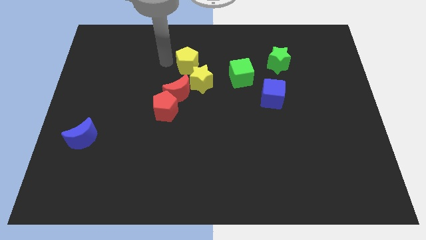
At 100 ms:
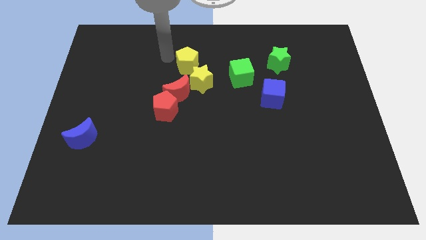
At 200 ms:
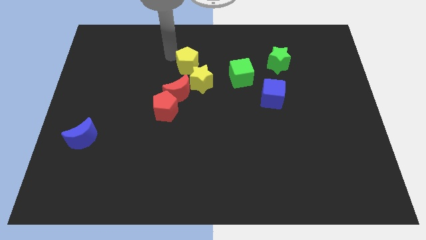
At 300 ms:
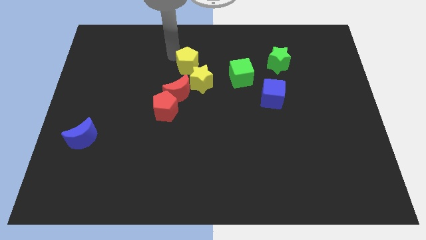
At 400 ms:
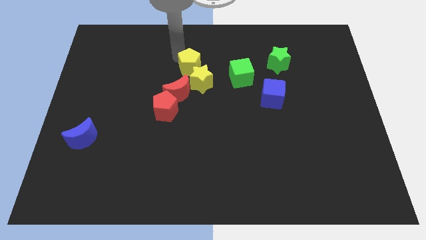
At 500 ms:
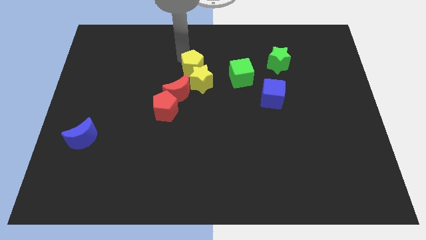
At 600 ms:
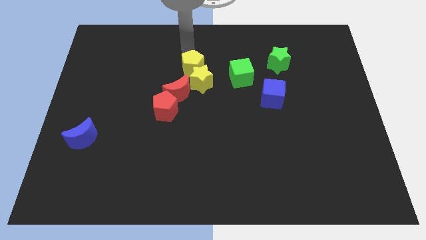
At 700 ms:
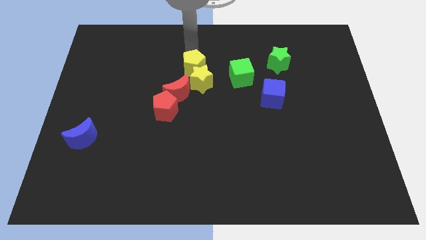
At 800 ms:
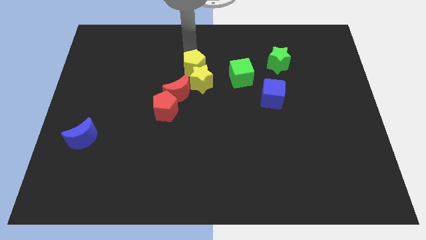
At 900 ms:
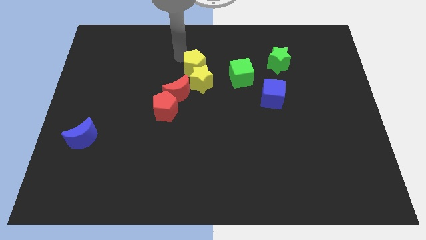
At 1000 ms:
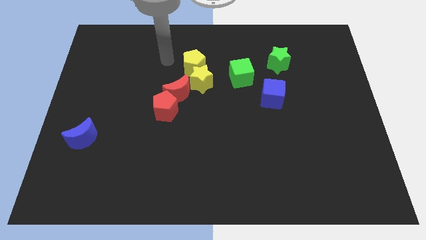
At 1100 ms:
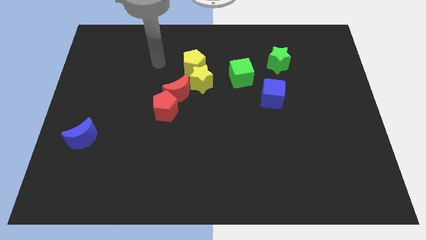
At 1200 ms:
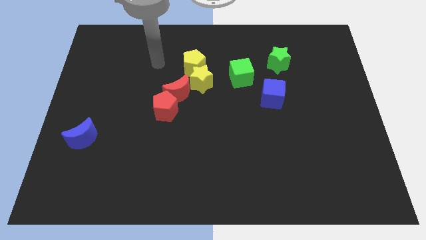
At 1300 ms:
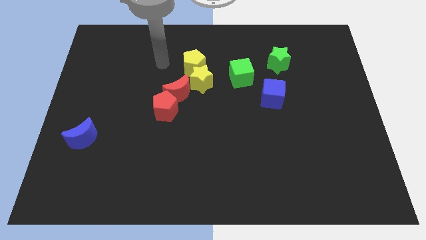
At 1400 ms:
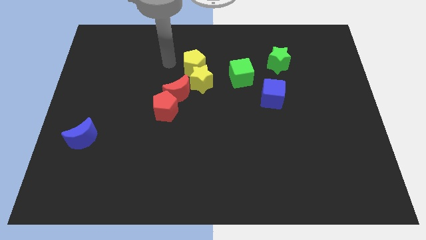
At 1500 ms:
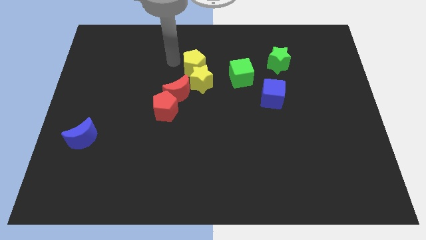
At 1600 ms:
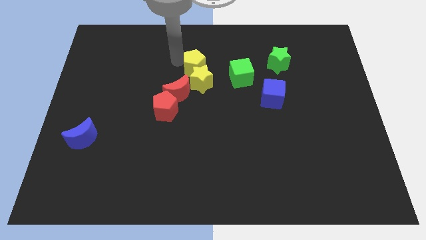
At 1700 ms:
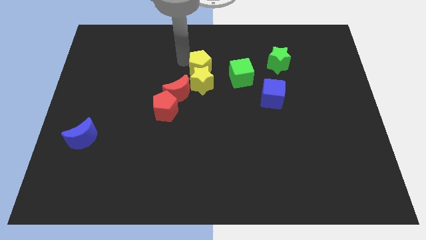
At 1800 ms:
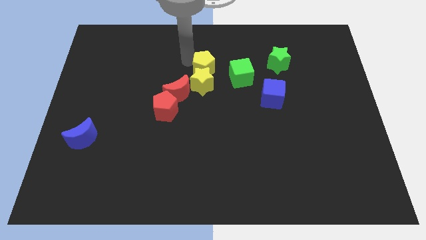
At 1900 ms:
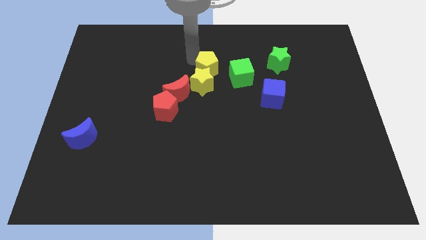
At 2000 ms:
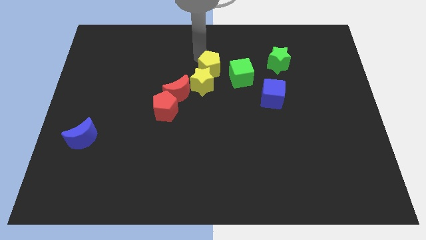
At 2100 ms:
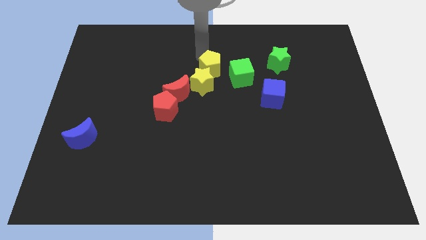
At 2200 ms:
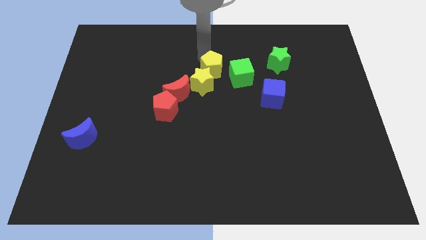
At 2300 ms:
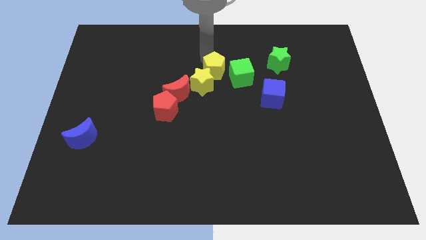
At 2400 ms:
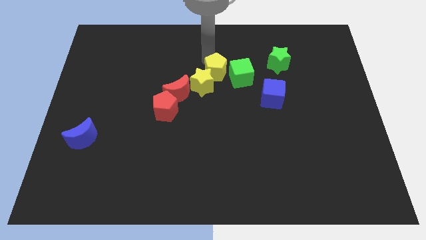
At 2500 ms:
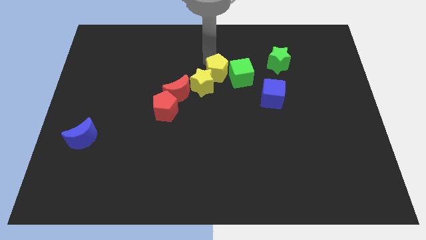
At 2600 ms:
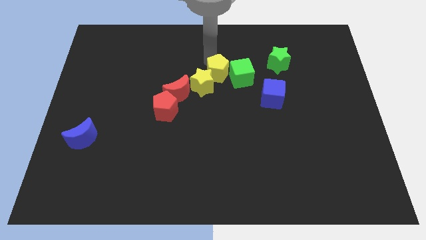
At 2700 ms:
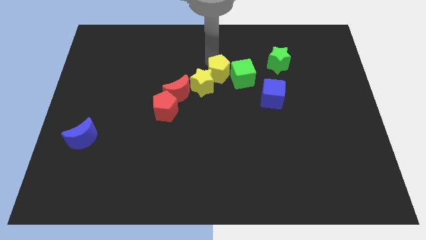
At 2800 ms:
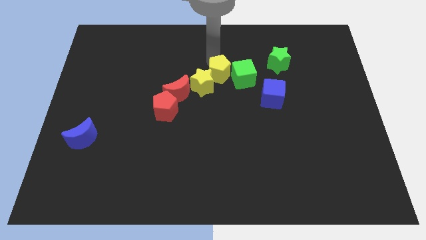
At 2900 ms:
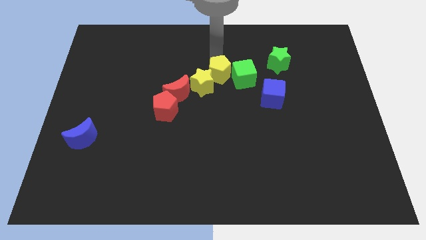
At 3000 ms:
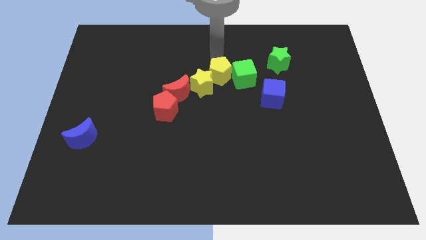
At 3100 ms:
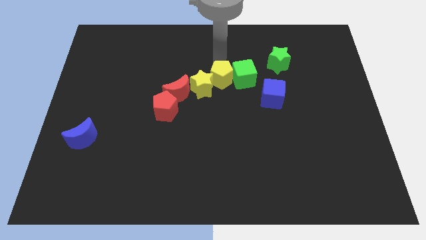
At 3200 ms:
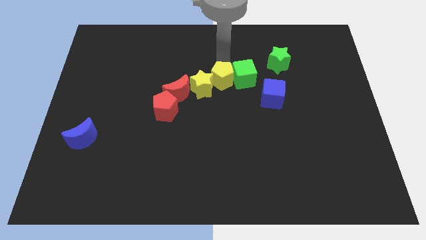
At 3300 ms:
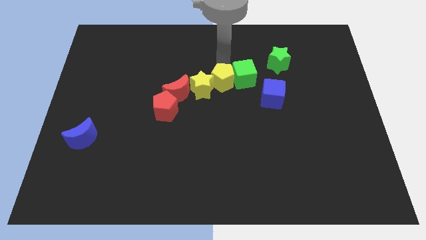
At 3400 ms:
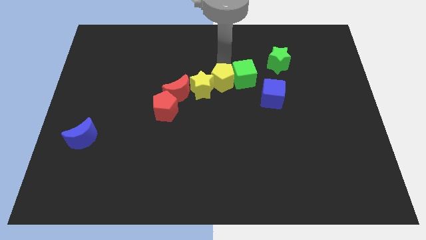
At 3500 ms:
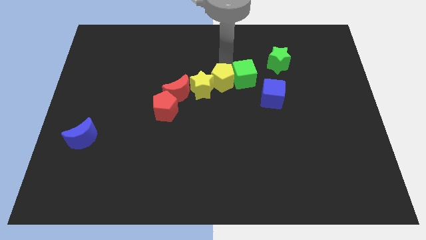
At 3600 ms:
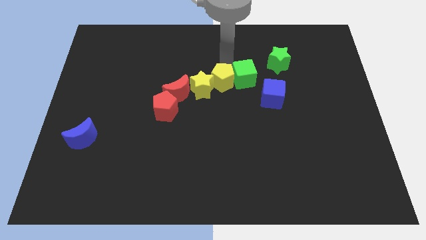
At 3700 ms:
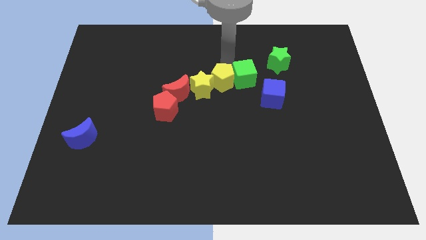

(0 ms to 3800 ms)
place the yellow pentagon left to the green cube

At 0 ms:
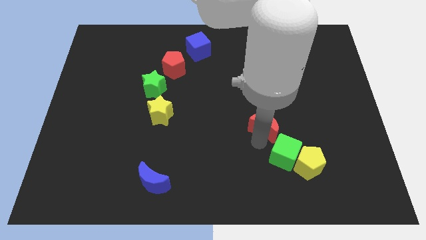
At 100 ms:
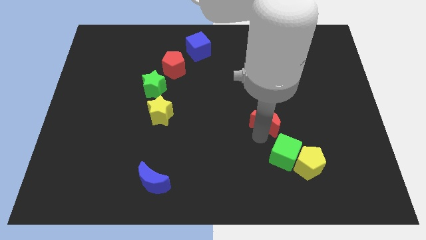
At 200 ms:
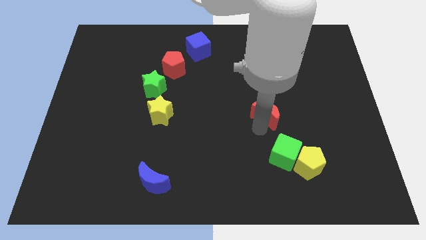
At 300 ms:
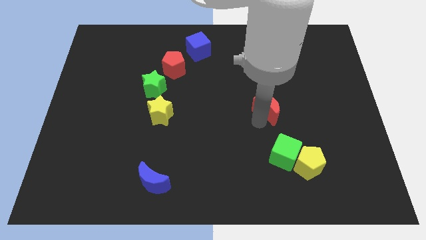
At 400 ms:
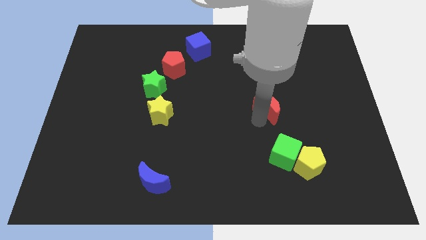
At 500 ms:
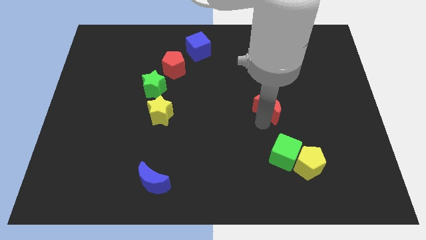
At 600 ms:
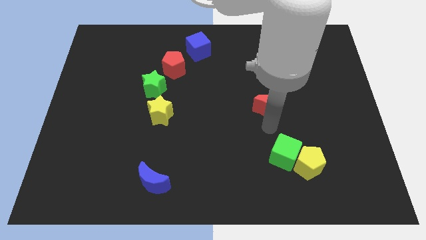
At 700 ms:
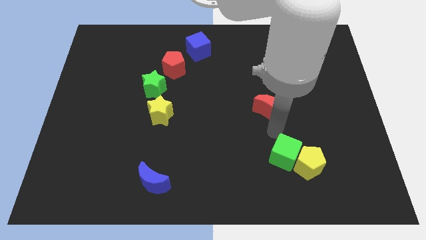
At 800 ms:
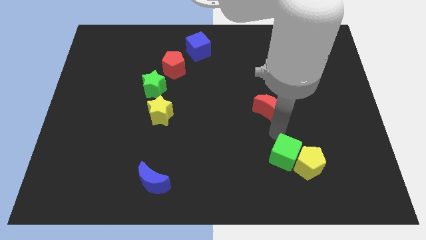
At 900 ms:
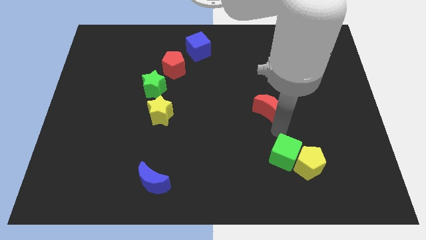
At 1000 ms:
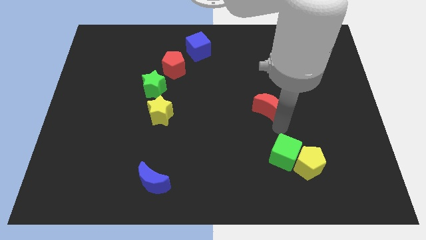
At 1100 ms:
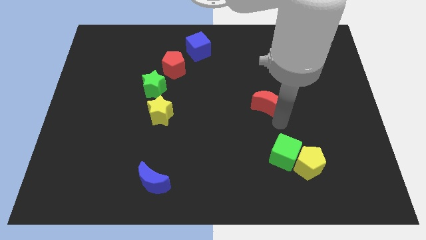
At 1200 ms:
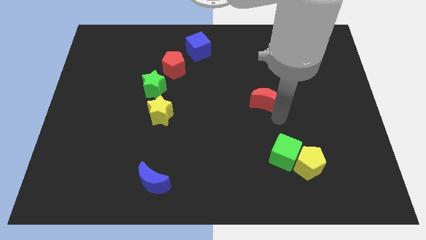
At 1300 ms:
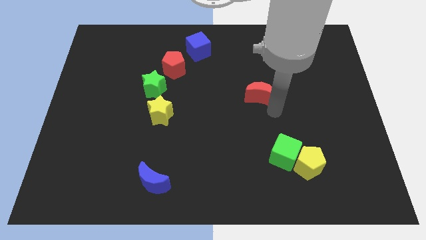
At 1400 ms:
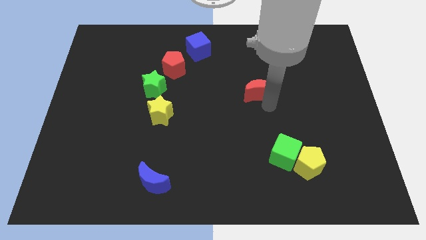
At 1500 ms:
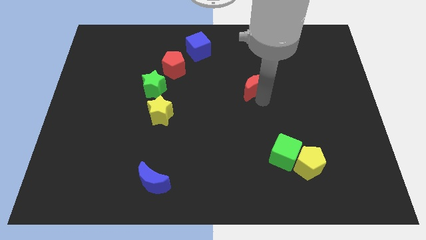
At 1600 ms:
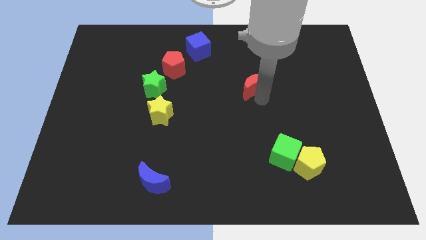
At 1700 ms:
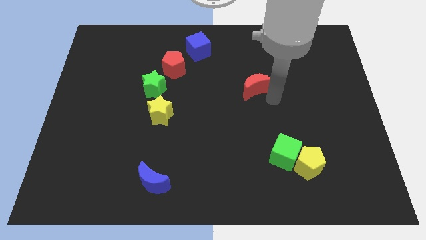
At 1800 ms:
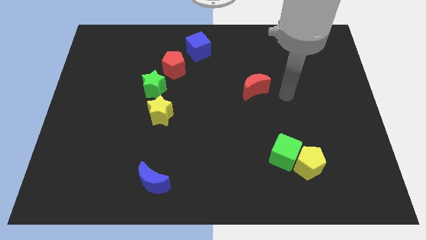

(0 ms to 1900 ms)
place the red crescent diagonal to the yellow star

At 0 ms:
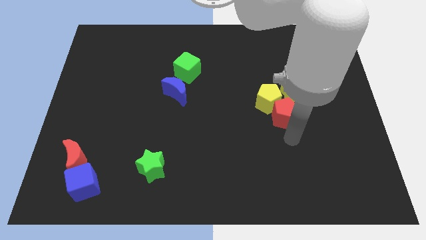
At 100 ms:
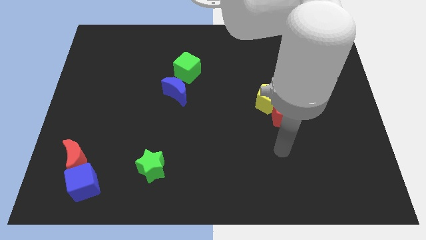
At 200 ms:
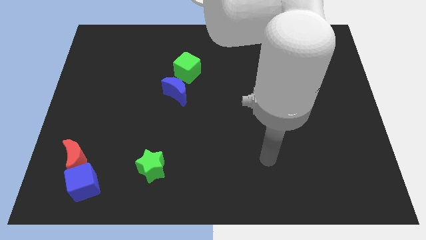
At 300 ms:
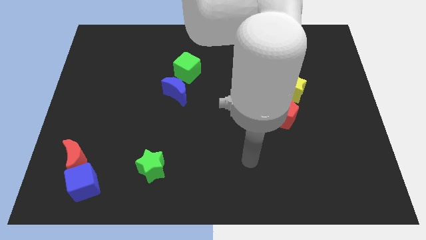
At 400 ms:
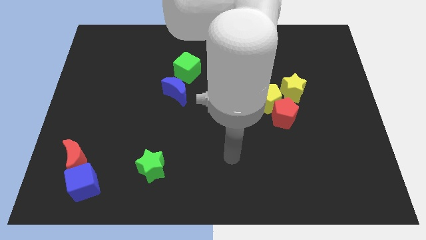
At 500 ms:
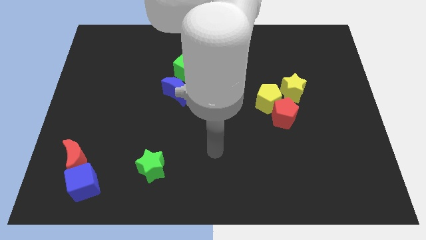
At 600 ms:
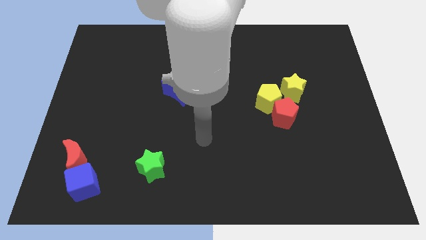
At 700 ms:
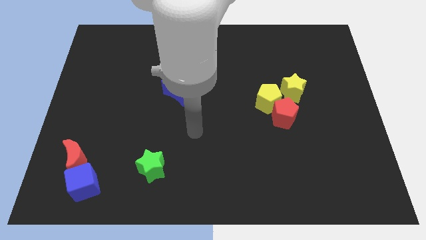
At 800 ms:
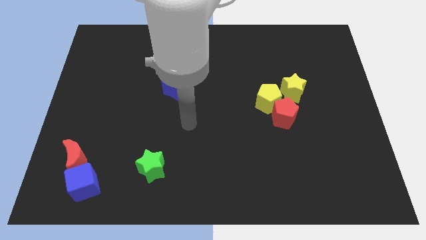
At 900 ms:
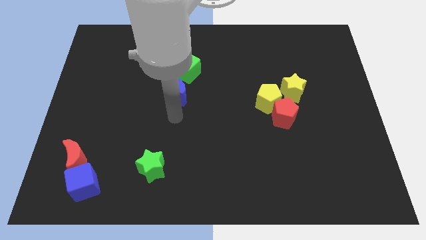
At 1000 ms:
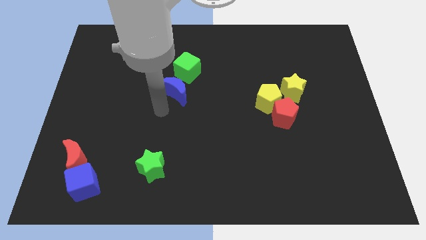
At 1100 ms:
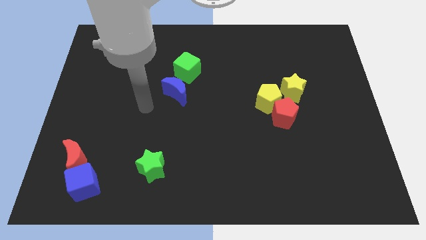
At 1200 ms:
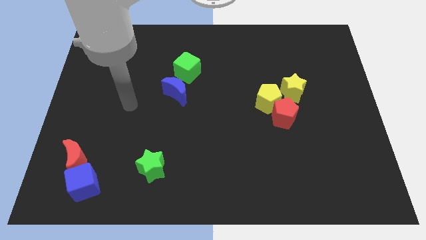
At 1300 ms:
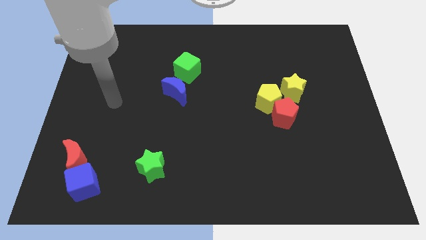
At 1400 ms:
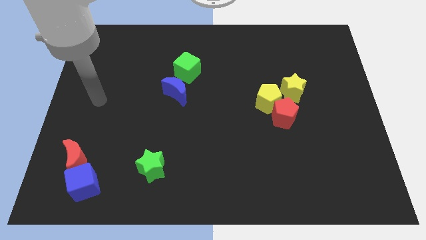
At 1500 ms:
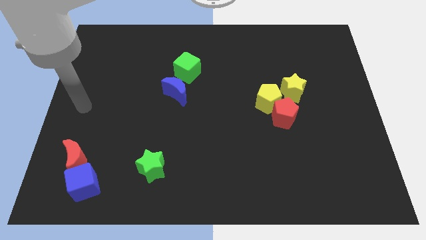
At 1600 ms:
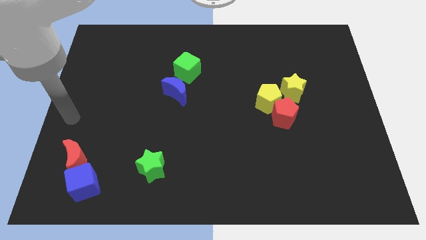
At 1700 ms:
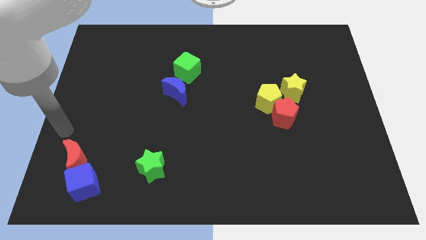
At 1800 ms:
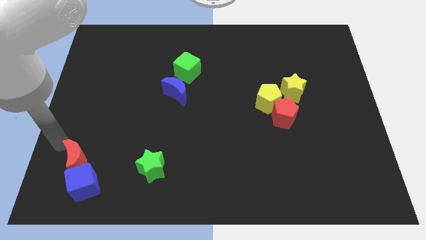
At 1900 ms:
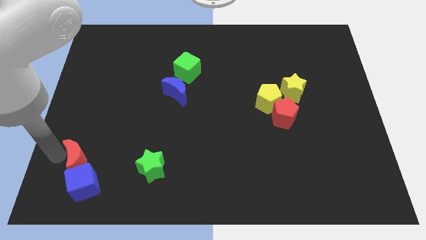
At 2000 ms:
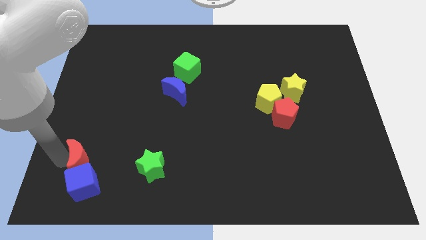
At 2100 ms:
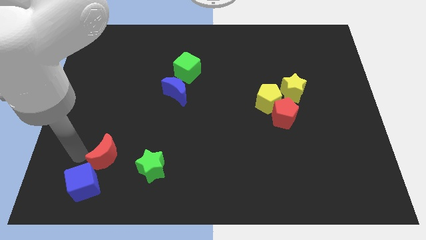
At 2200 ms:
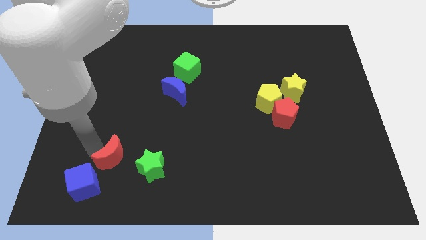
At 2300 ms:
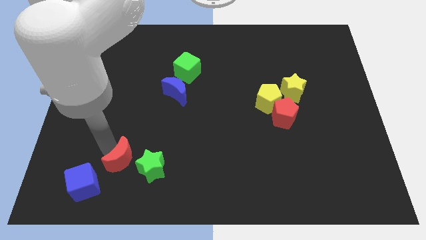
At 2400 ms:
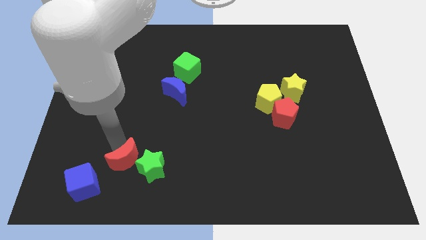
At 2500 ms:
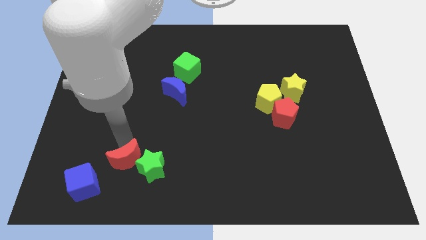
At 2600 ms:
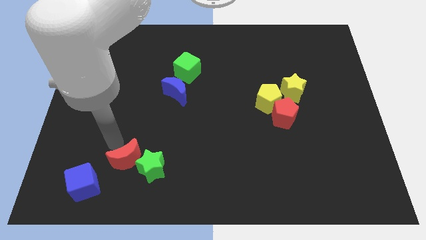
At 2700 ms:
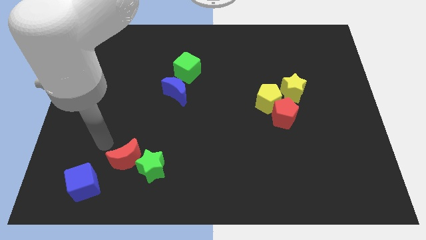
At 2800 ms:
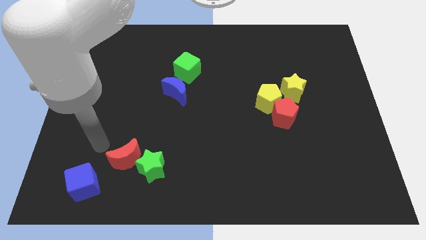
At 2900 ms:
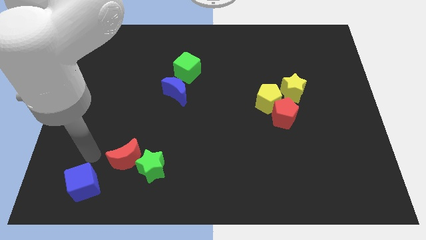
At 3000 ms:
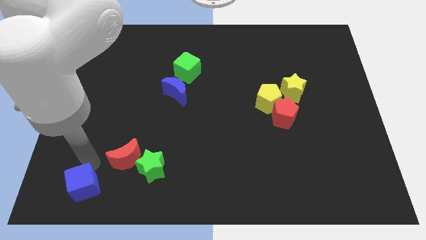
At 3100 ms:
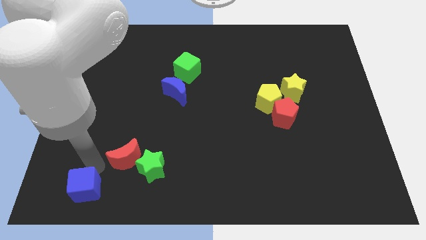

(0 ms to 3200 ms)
move the red crescent towards the top left of the green star

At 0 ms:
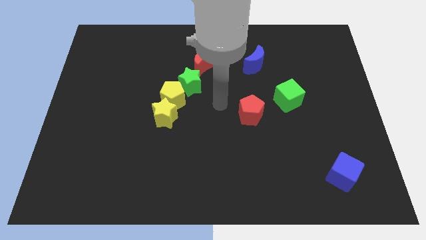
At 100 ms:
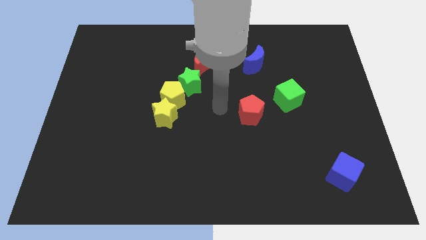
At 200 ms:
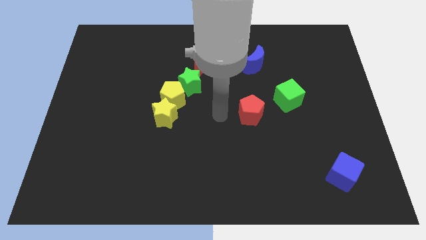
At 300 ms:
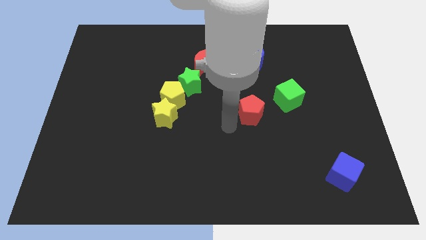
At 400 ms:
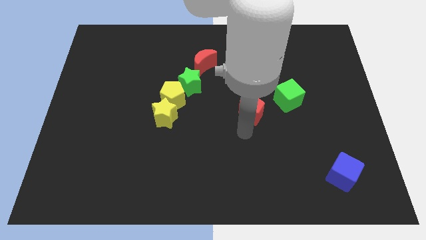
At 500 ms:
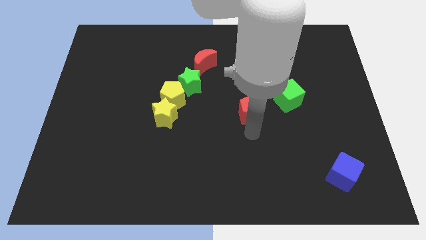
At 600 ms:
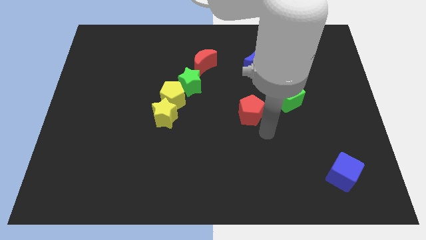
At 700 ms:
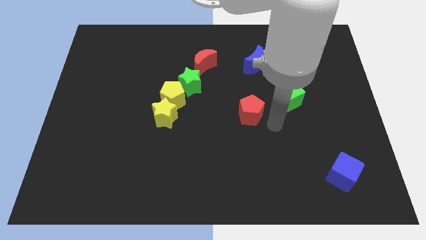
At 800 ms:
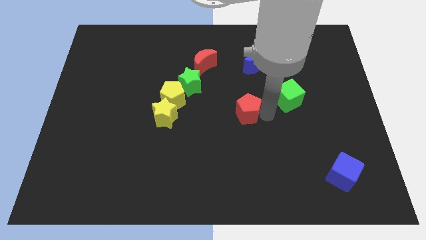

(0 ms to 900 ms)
touch the bottom of red pentagon
